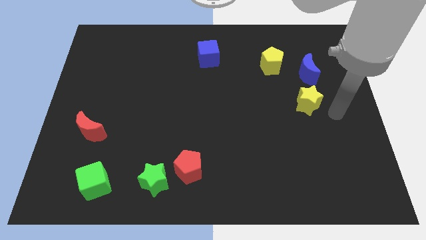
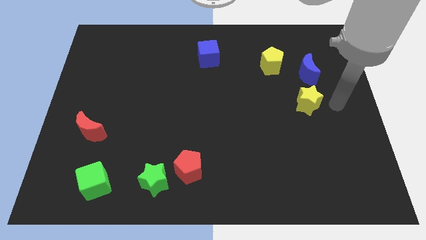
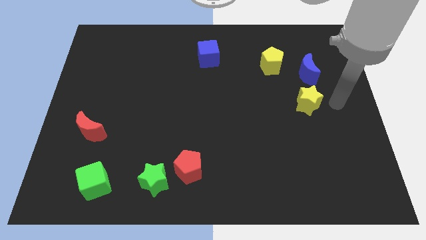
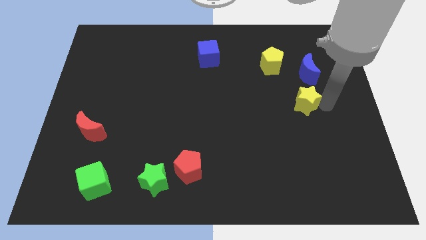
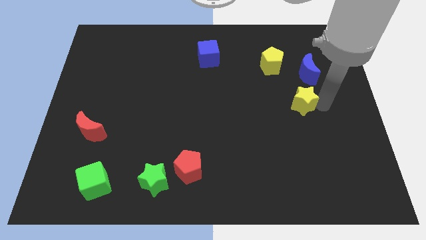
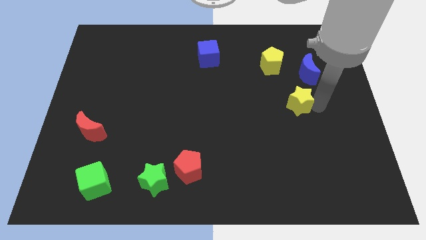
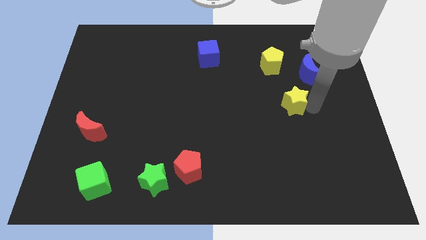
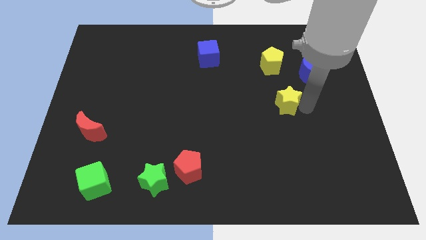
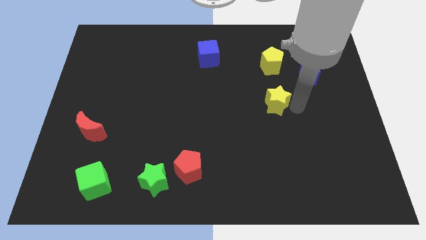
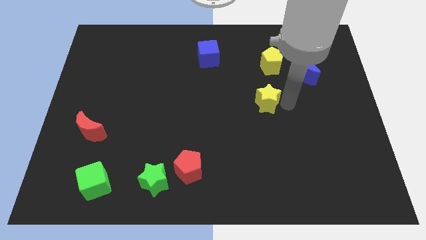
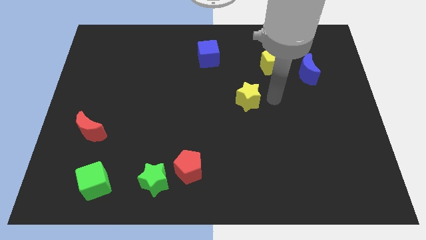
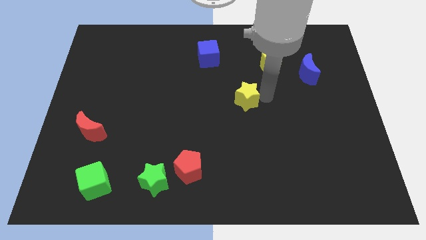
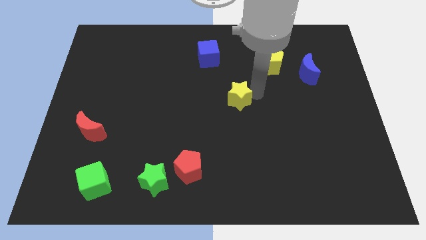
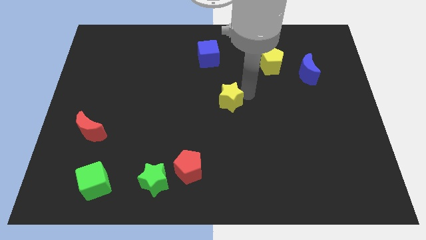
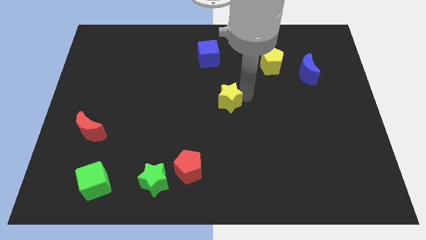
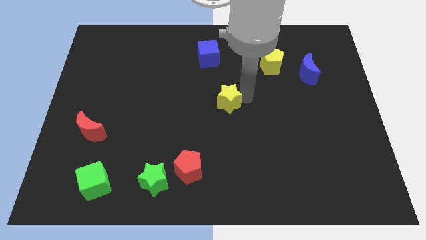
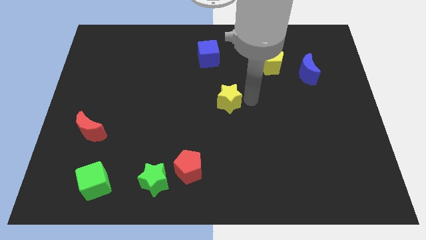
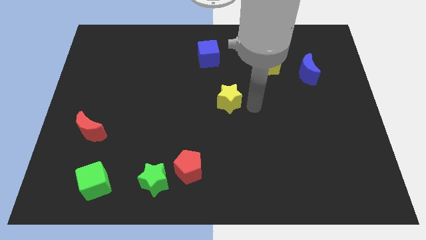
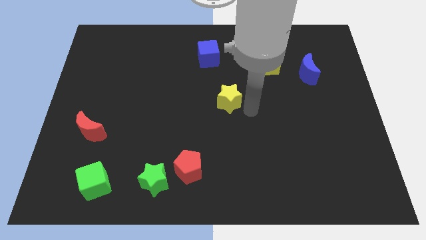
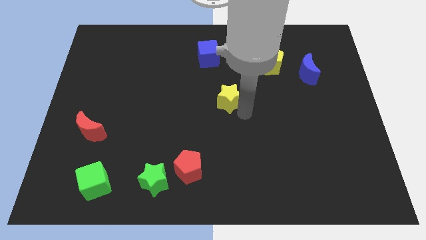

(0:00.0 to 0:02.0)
move the yellow star to the center of the board

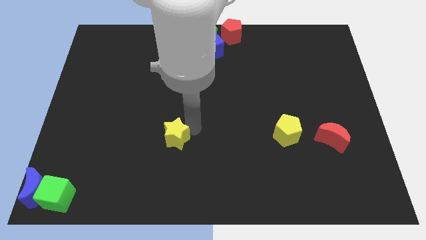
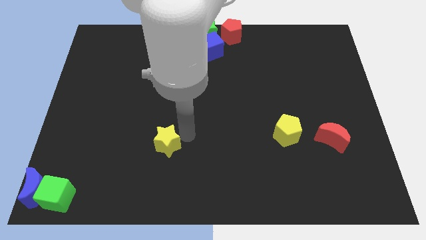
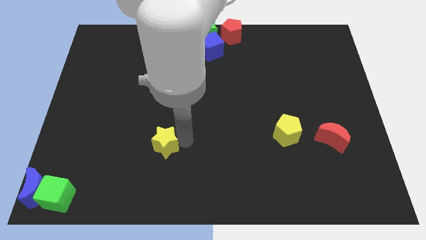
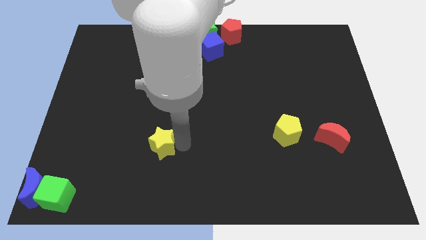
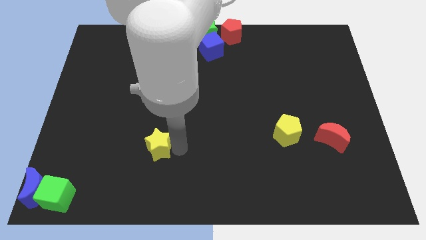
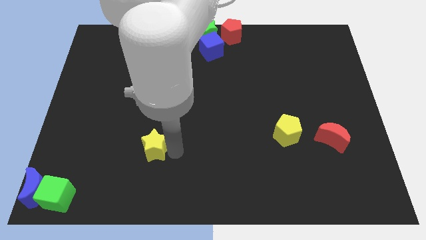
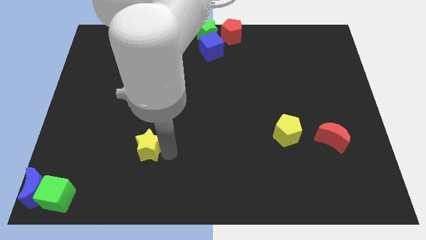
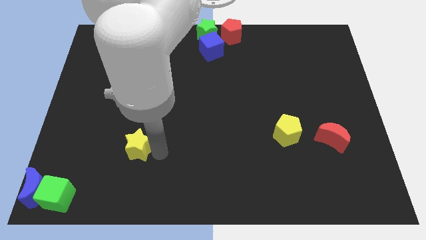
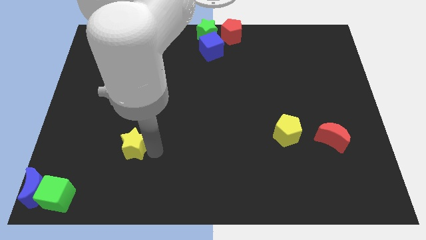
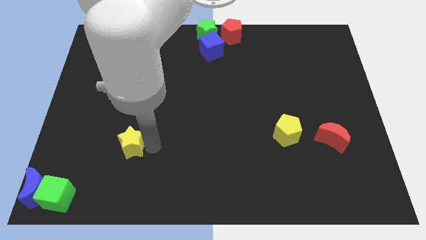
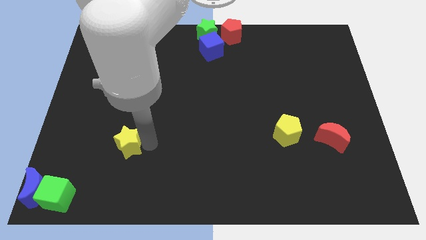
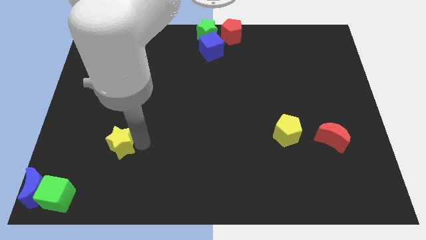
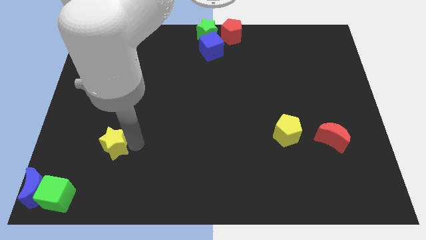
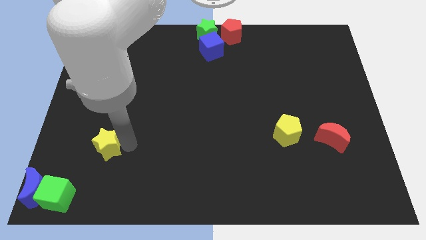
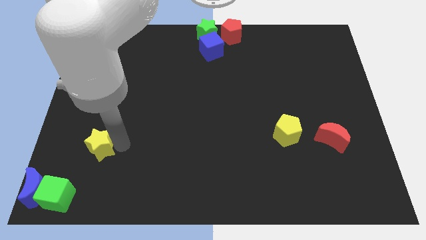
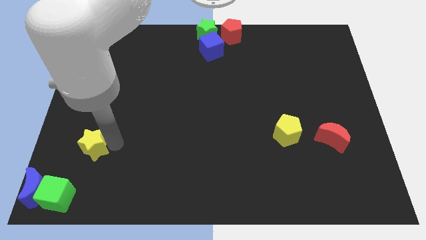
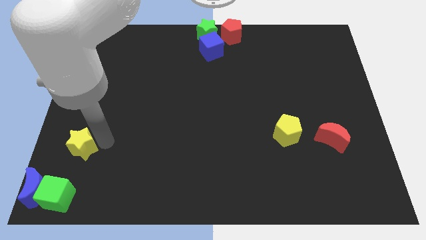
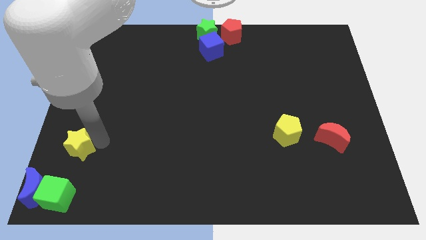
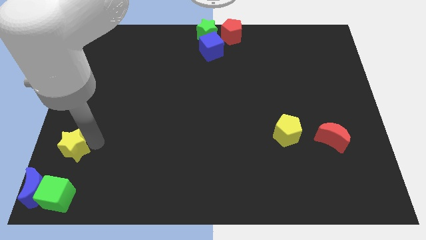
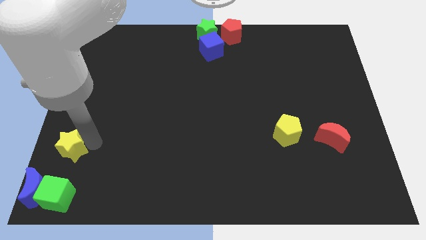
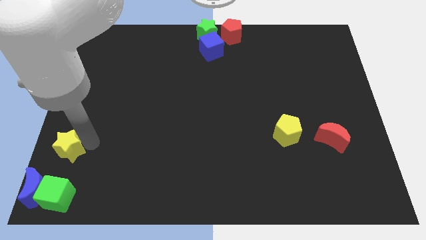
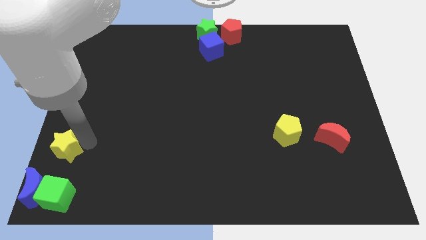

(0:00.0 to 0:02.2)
move the yellow star to the bottom left of the board

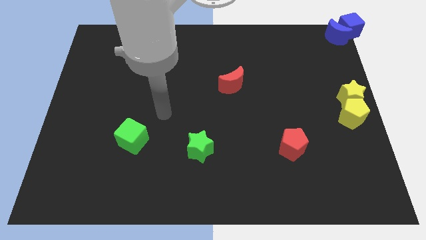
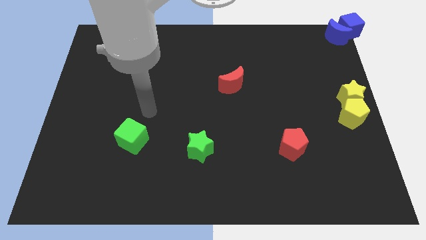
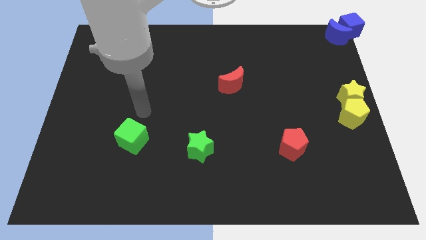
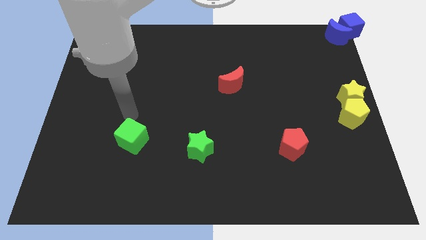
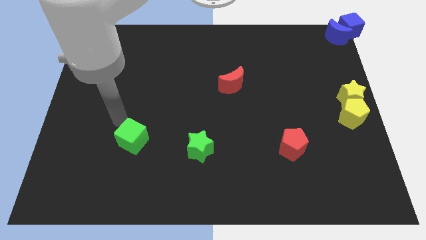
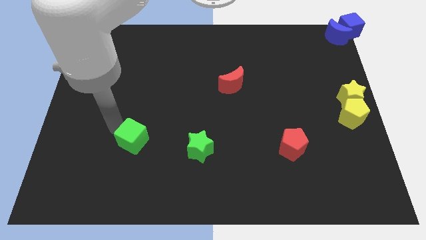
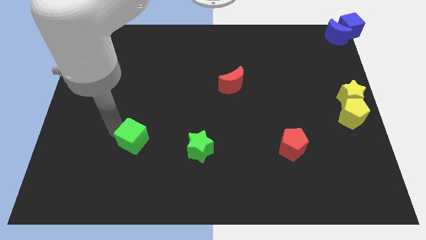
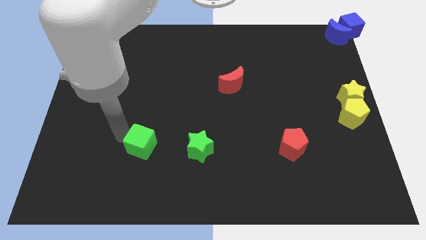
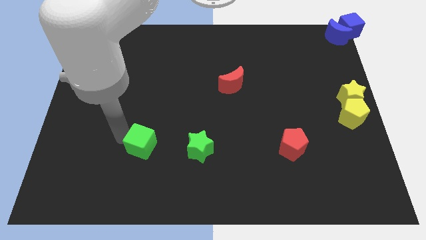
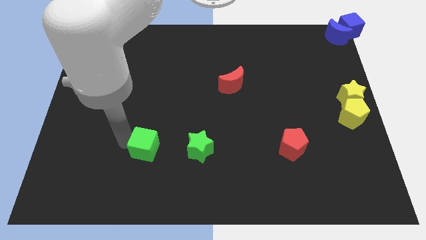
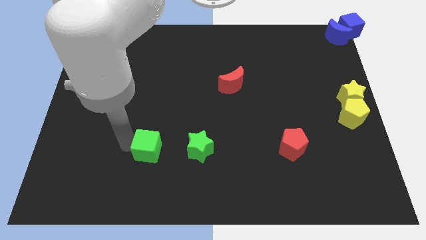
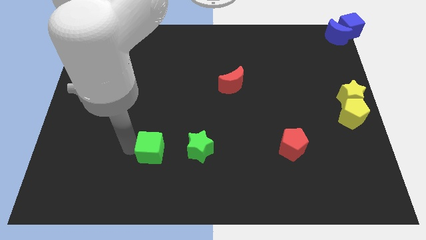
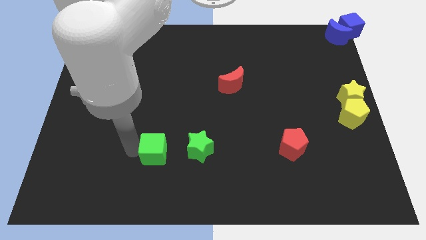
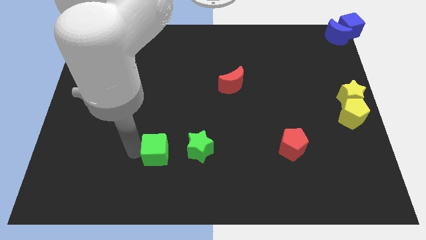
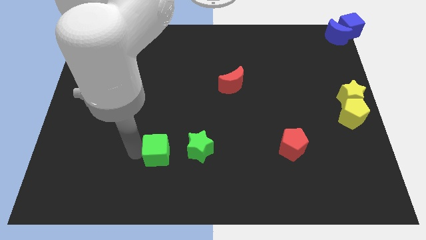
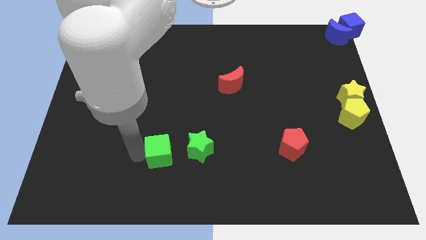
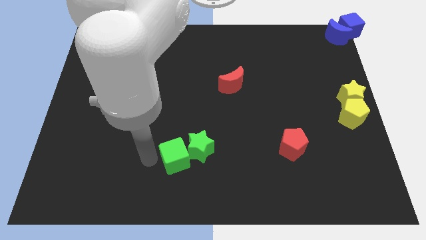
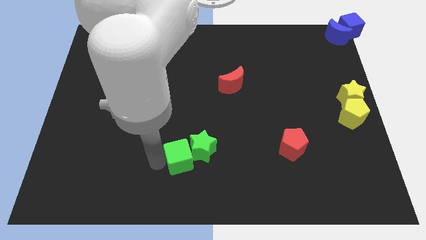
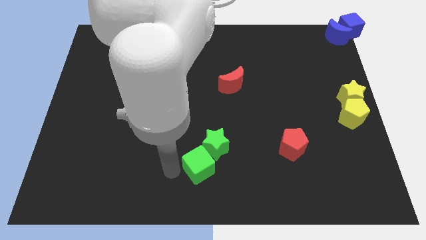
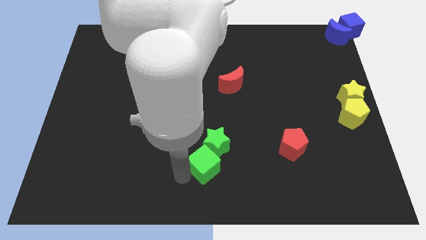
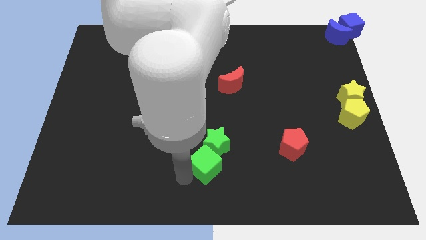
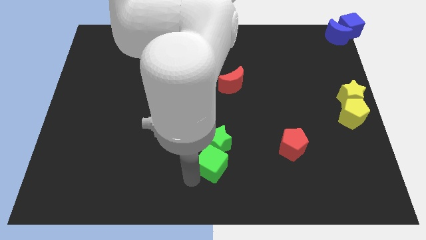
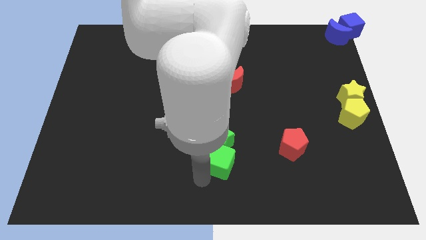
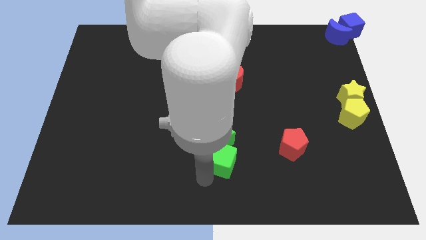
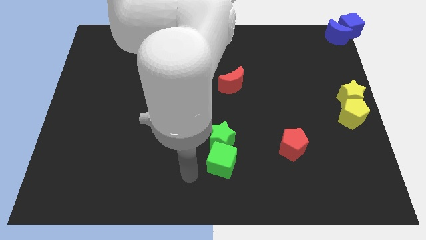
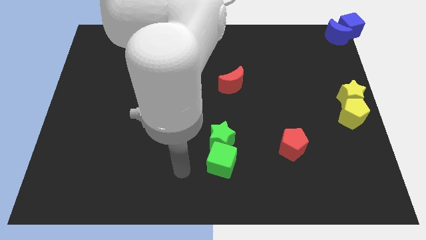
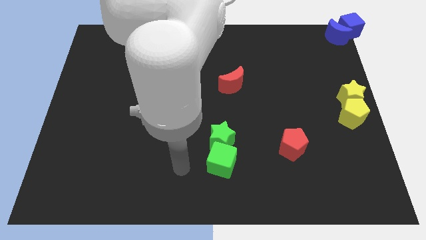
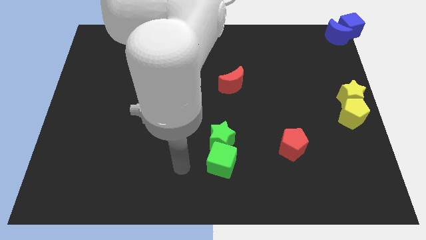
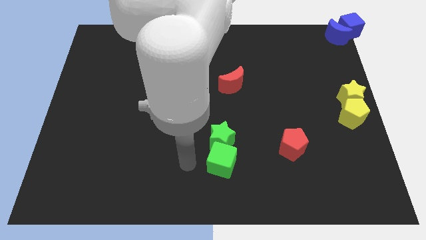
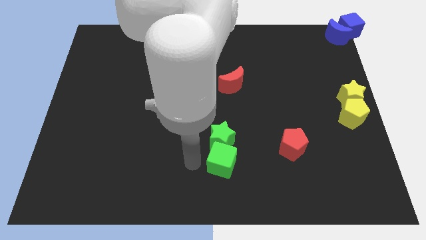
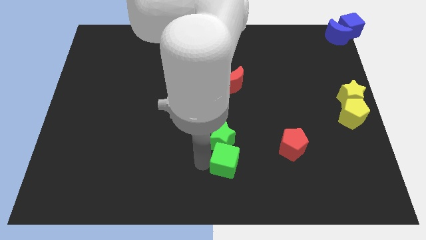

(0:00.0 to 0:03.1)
push the green cube to the bottom of the green star

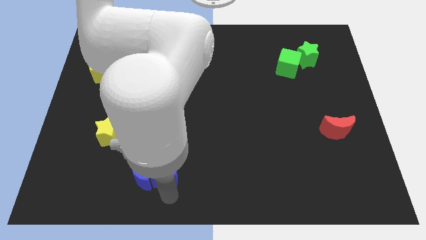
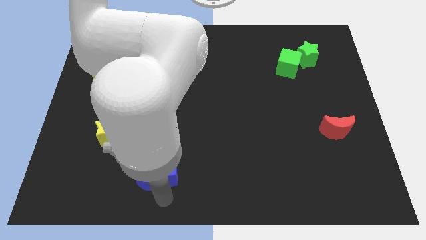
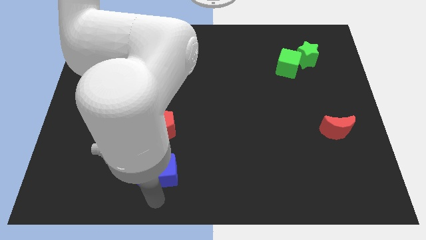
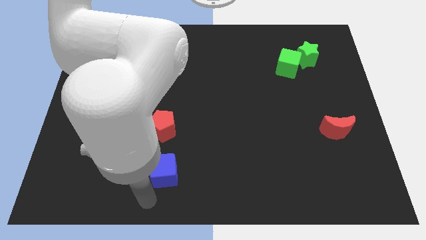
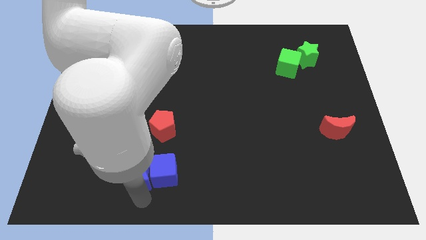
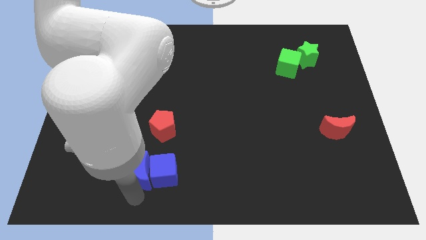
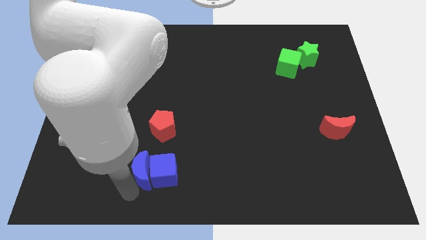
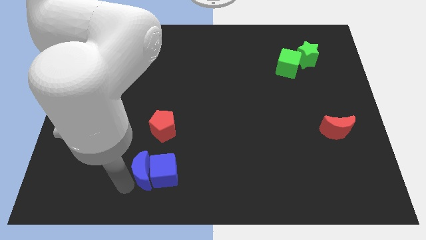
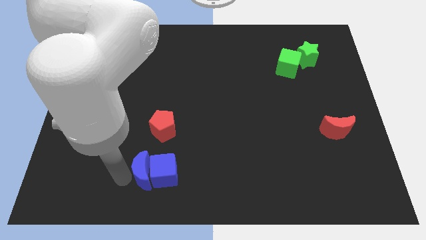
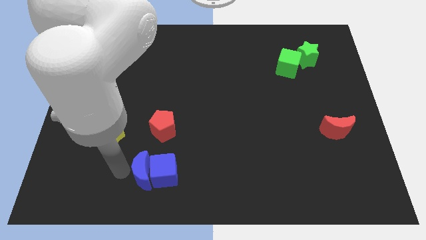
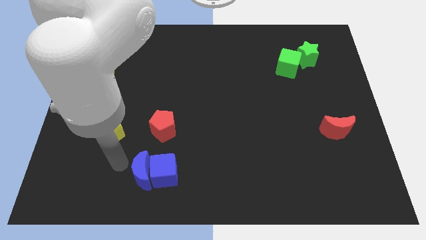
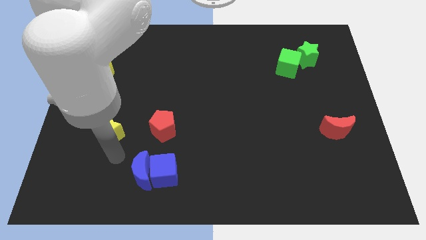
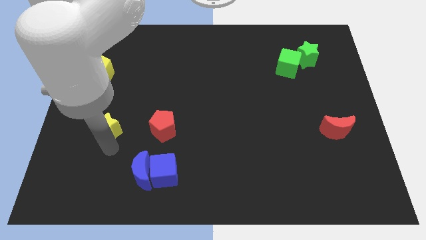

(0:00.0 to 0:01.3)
point the arm below the yellow star

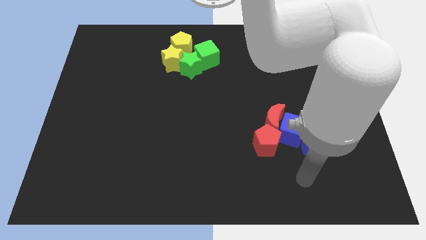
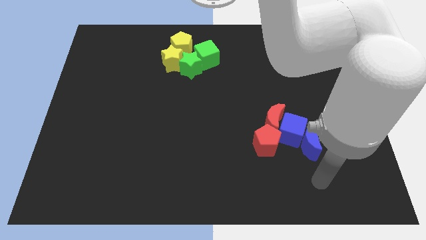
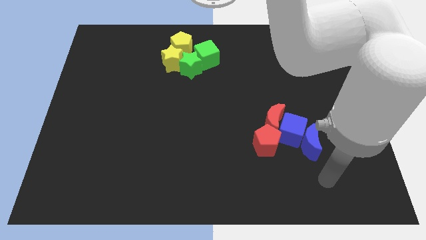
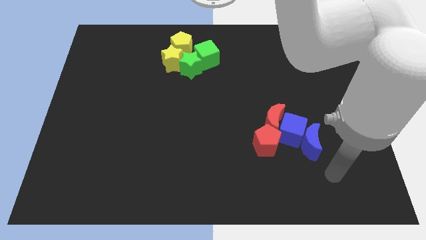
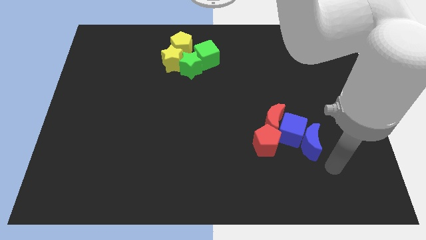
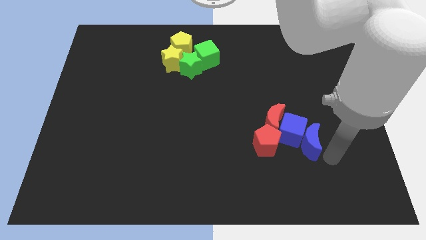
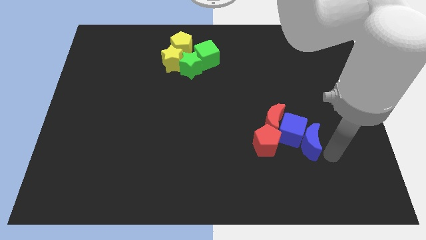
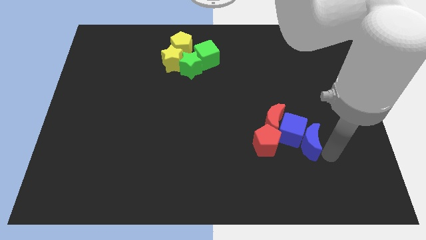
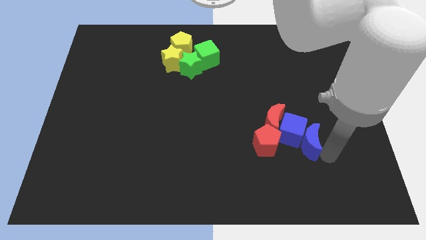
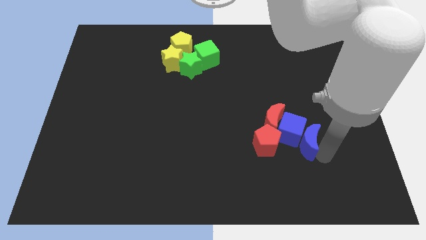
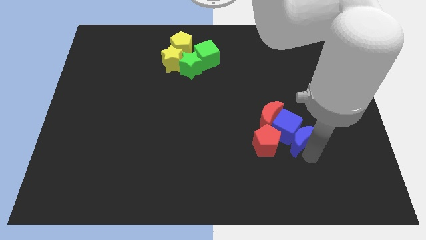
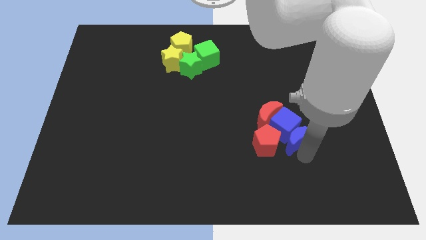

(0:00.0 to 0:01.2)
move the blue crescent blue cube and red crescent towards top
